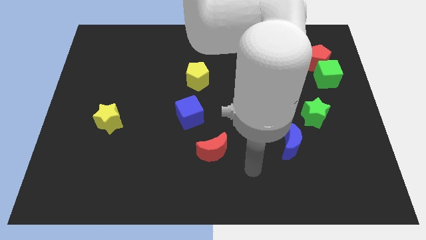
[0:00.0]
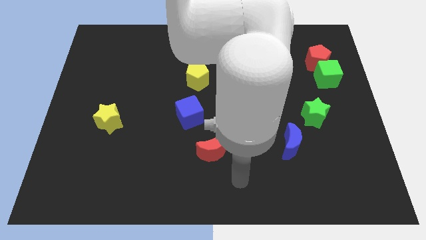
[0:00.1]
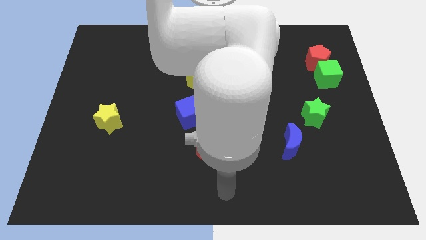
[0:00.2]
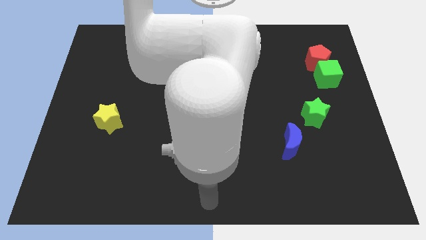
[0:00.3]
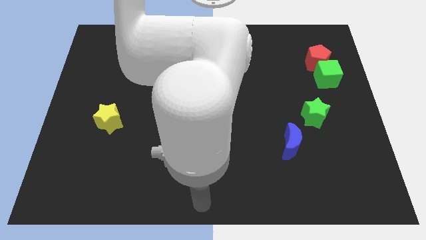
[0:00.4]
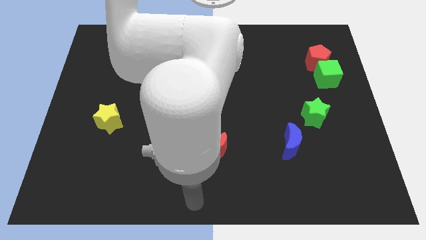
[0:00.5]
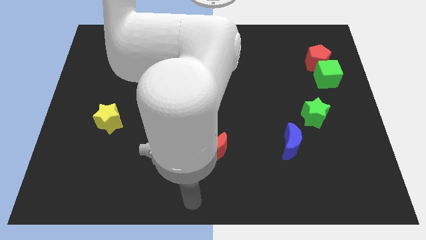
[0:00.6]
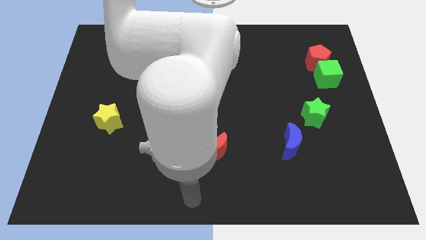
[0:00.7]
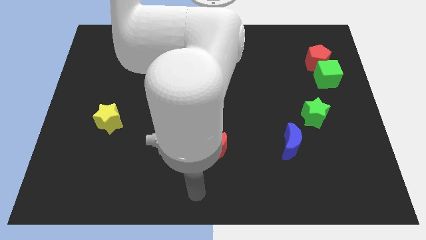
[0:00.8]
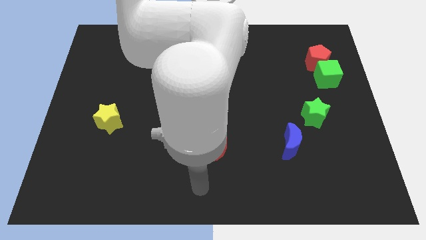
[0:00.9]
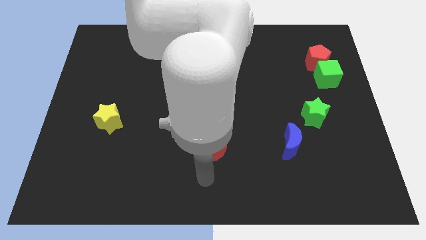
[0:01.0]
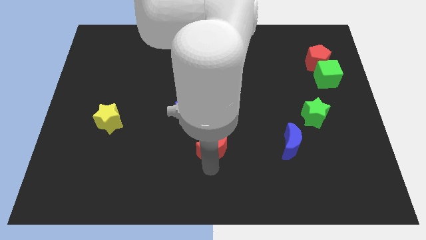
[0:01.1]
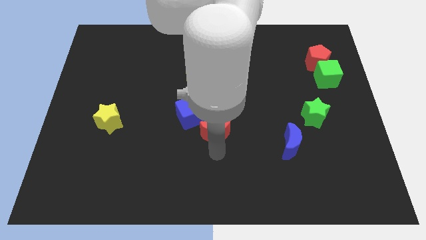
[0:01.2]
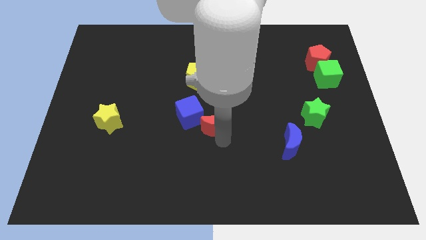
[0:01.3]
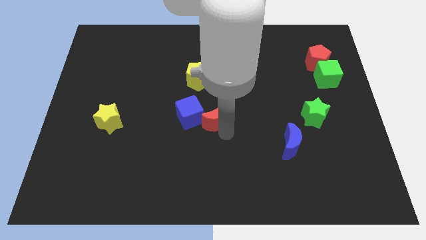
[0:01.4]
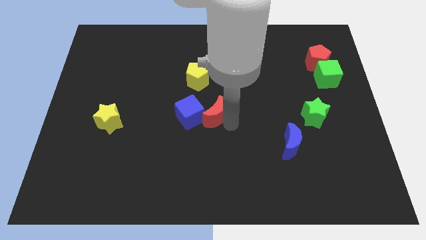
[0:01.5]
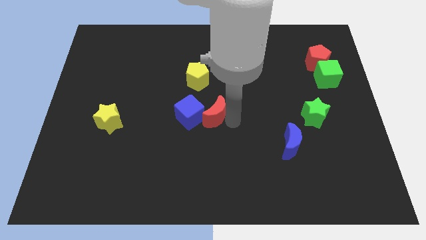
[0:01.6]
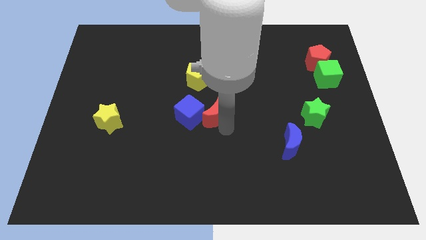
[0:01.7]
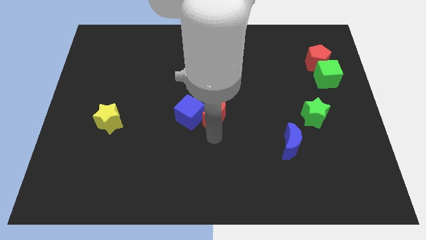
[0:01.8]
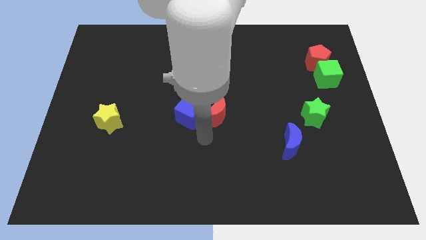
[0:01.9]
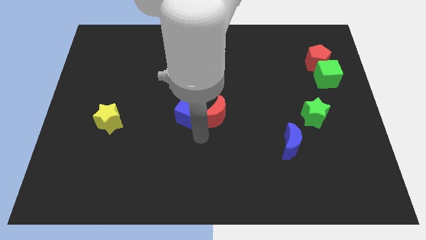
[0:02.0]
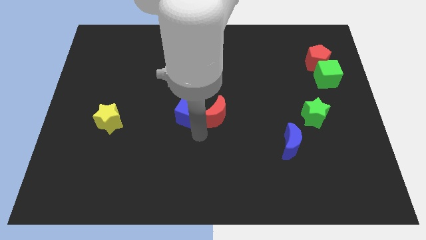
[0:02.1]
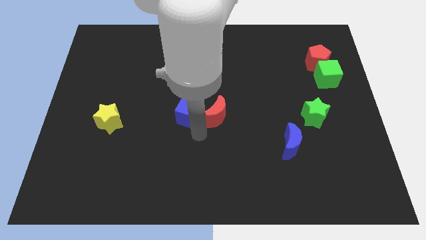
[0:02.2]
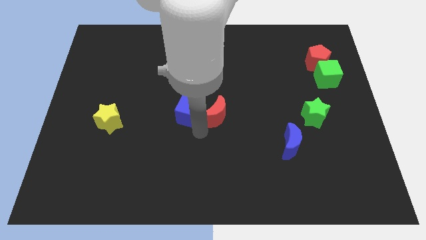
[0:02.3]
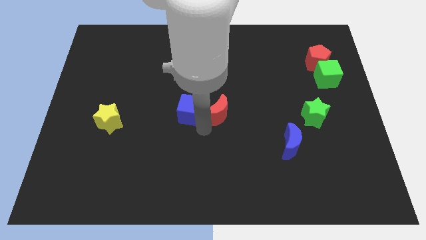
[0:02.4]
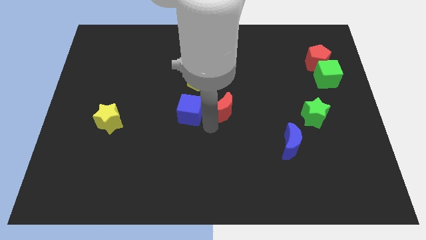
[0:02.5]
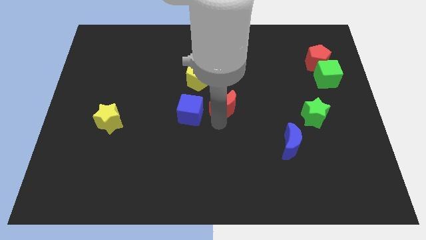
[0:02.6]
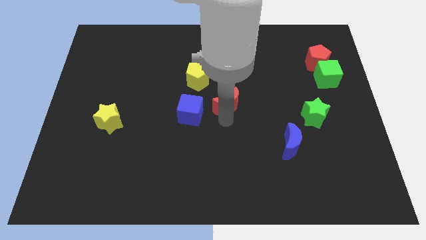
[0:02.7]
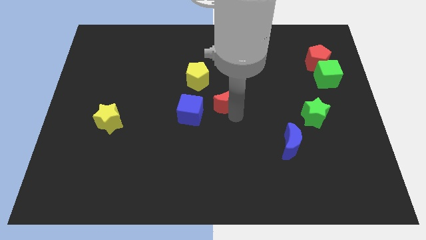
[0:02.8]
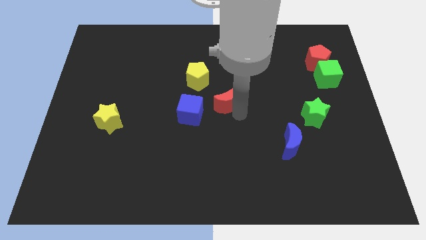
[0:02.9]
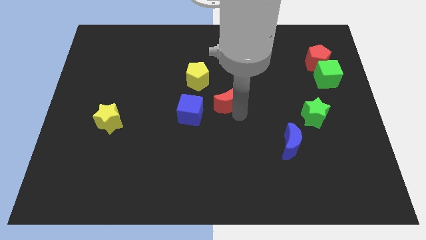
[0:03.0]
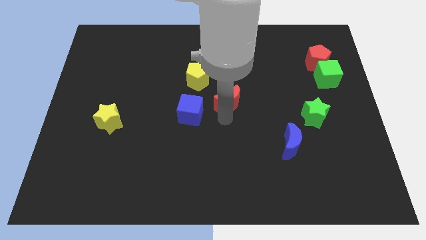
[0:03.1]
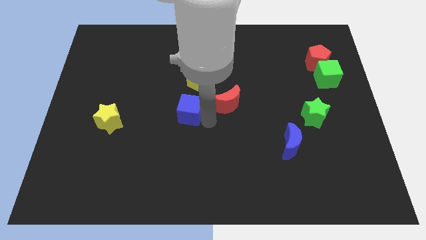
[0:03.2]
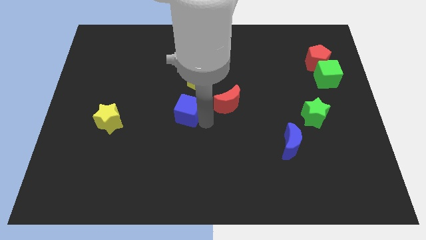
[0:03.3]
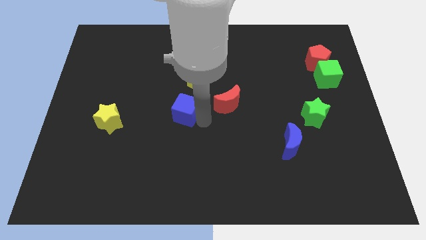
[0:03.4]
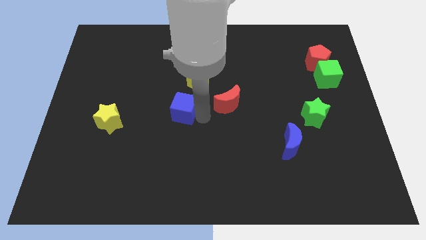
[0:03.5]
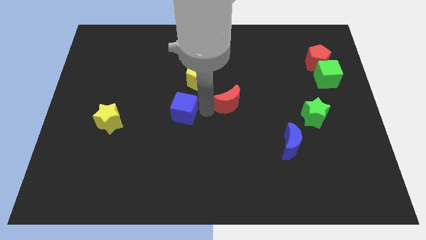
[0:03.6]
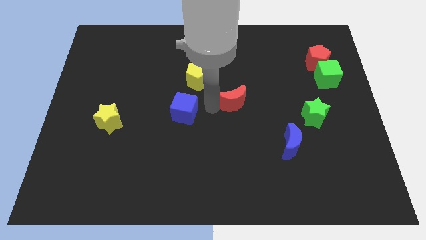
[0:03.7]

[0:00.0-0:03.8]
push the red moon towards the right side of the board

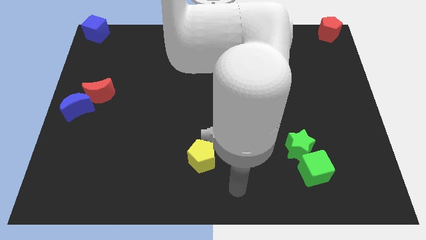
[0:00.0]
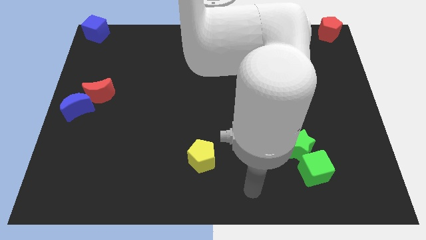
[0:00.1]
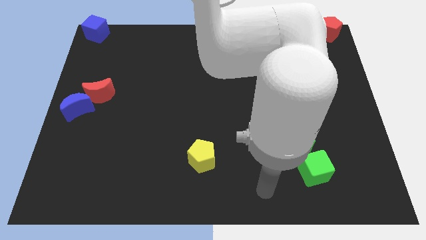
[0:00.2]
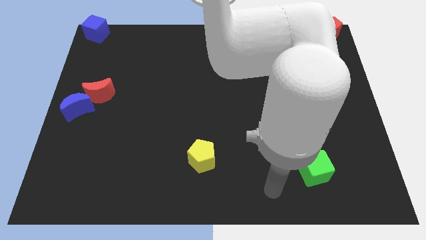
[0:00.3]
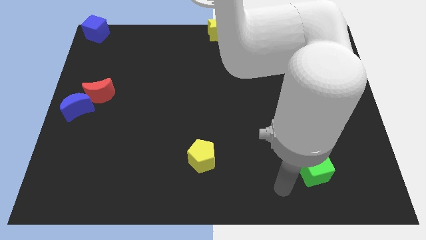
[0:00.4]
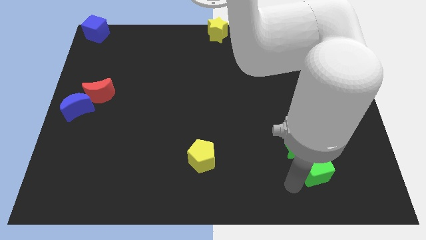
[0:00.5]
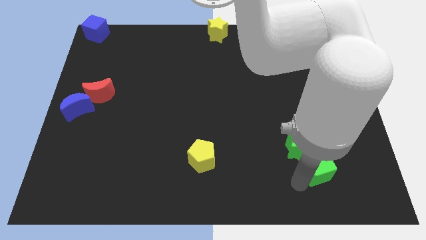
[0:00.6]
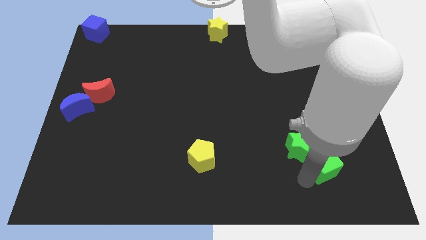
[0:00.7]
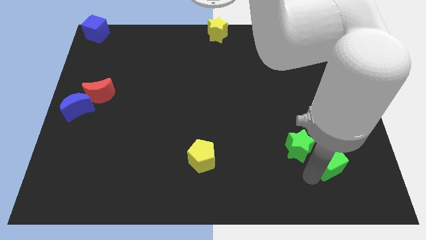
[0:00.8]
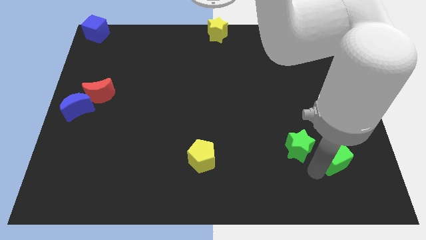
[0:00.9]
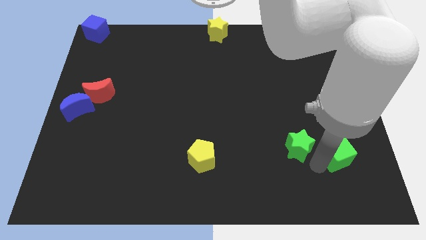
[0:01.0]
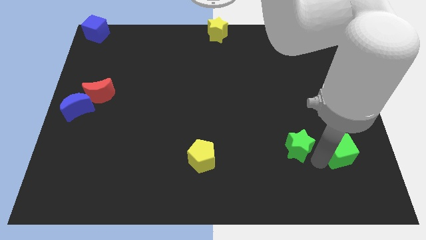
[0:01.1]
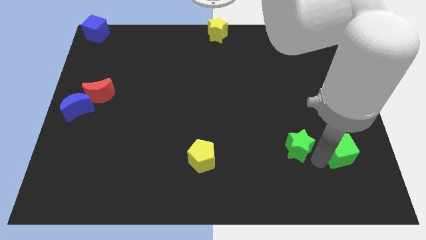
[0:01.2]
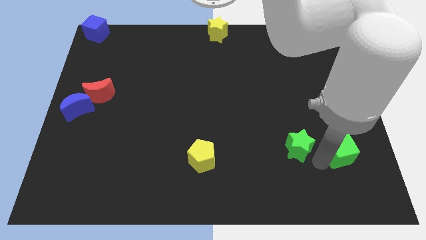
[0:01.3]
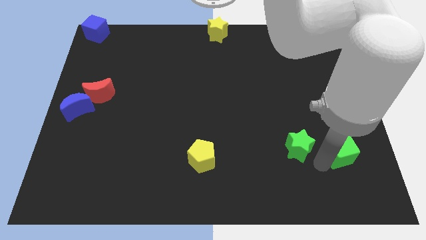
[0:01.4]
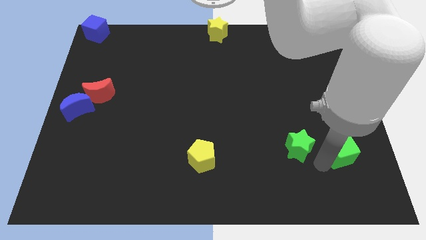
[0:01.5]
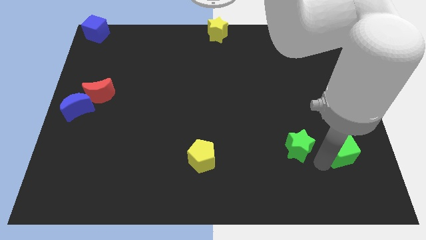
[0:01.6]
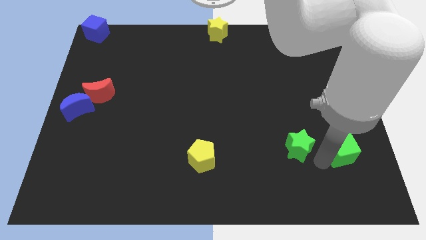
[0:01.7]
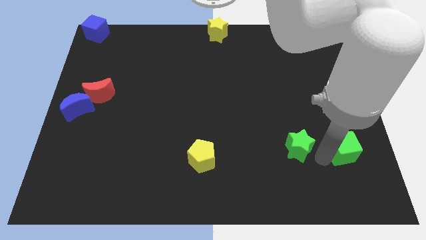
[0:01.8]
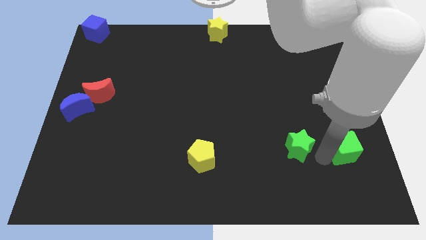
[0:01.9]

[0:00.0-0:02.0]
separate the green cube and green star

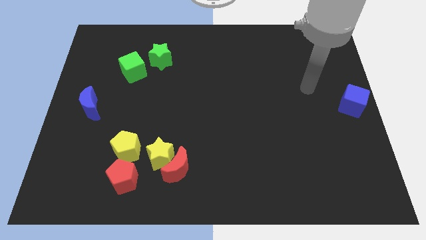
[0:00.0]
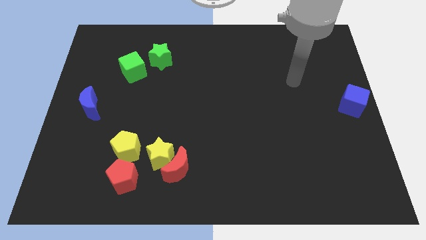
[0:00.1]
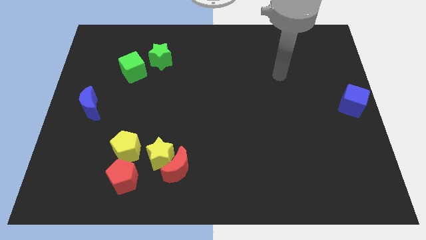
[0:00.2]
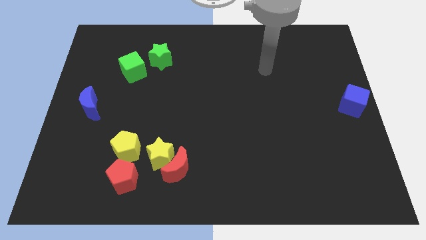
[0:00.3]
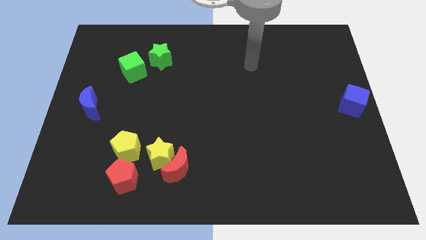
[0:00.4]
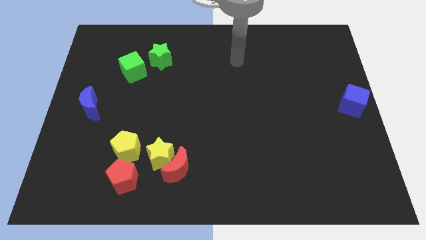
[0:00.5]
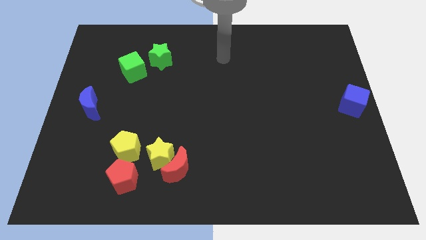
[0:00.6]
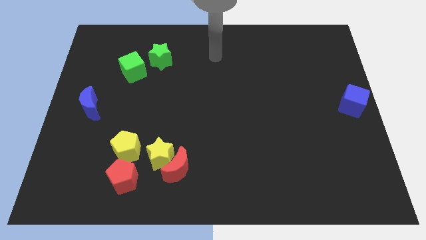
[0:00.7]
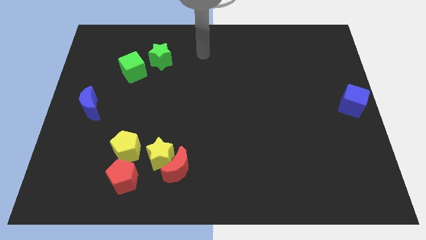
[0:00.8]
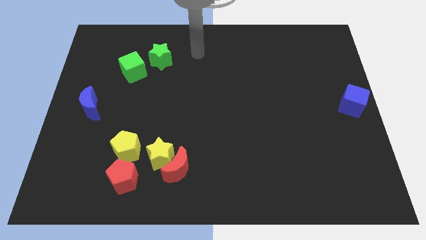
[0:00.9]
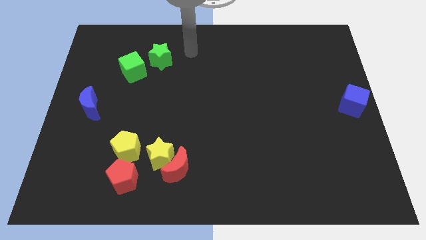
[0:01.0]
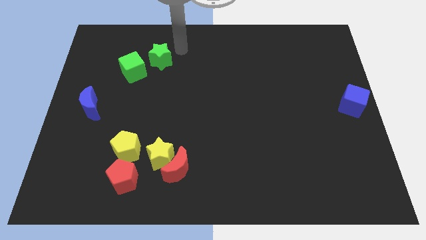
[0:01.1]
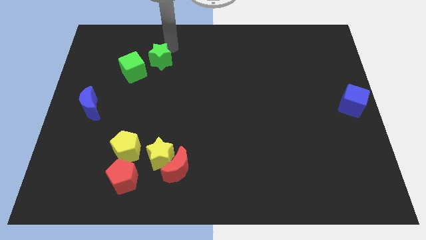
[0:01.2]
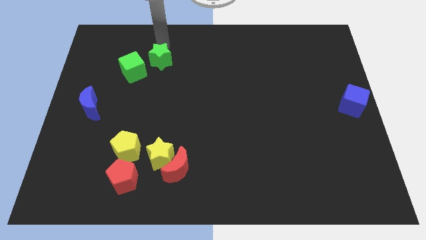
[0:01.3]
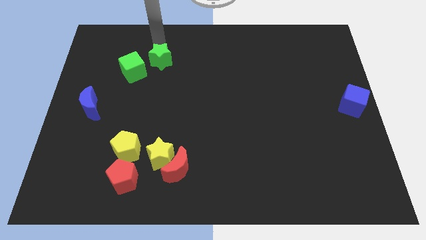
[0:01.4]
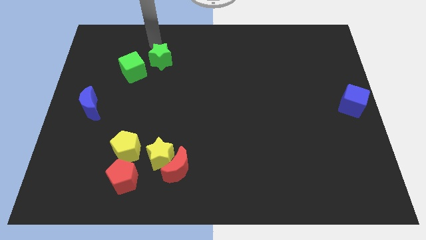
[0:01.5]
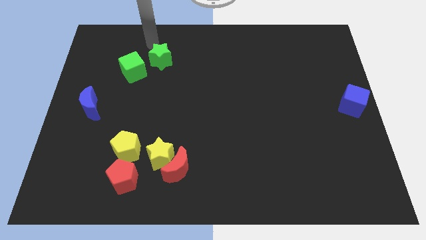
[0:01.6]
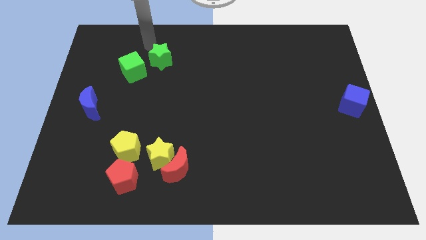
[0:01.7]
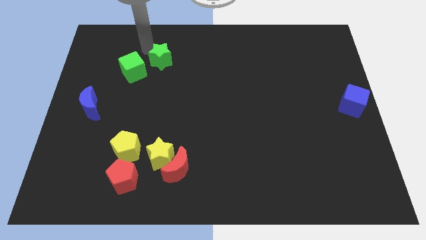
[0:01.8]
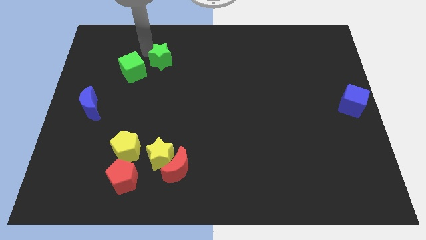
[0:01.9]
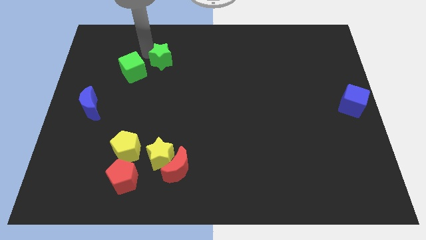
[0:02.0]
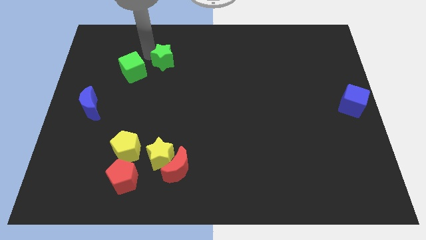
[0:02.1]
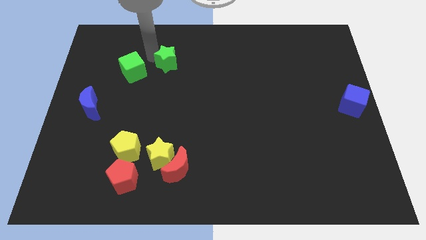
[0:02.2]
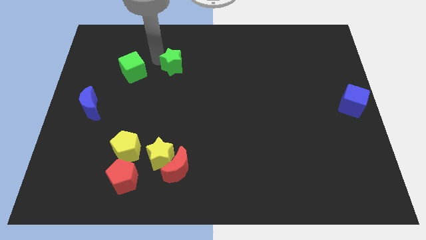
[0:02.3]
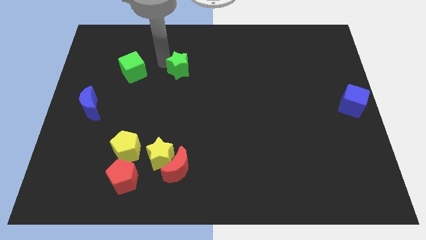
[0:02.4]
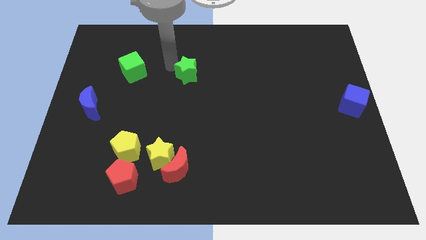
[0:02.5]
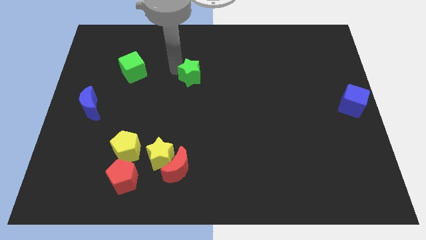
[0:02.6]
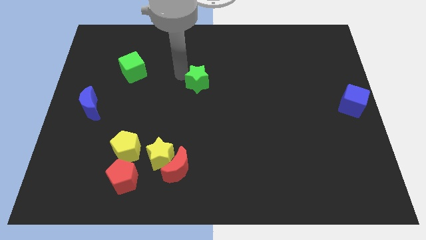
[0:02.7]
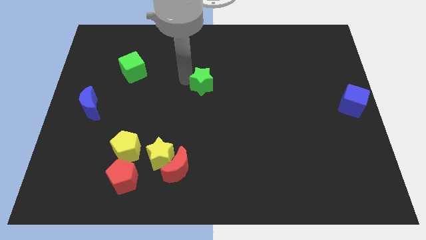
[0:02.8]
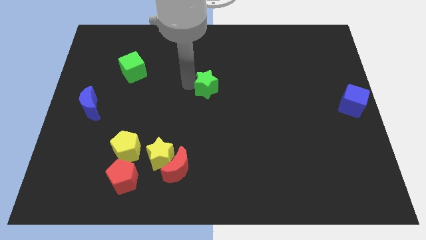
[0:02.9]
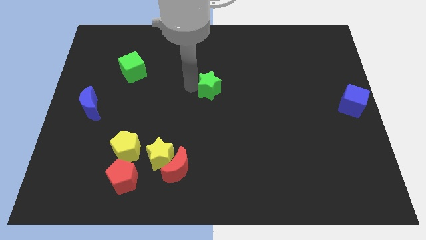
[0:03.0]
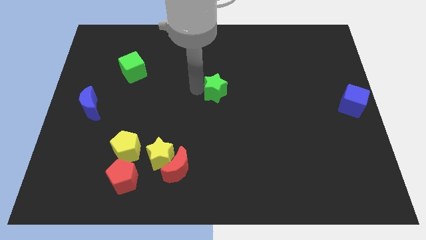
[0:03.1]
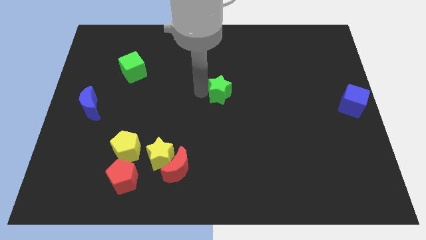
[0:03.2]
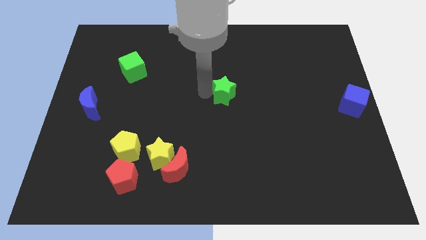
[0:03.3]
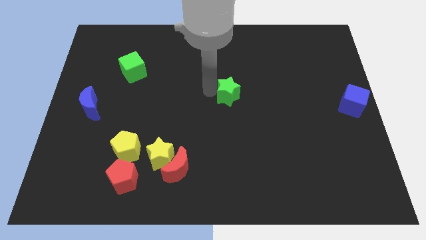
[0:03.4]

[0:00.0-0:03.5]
place the green star to the center of the board
